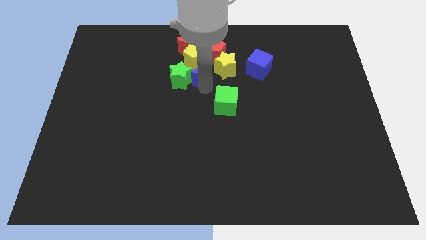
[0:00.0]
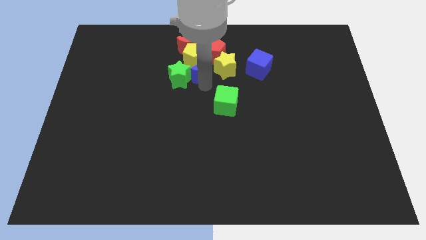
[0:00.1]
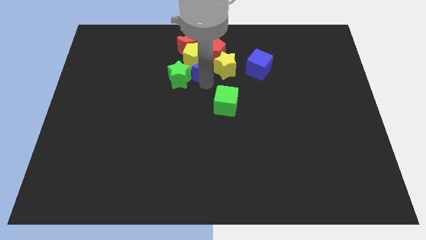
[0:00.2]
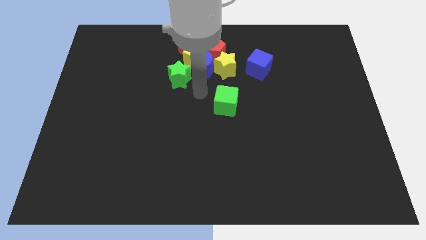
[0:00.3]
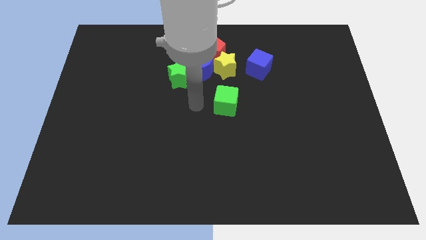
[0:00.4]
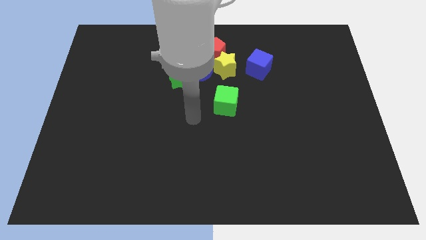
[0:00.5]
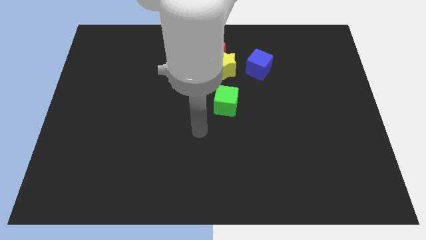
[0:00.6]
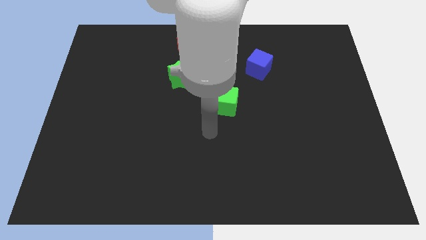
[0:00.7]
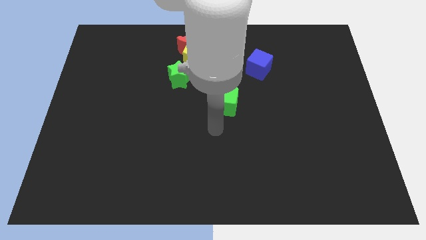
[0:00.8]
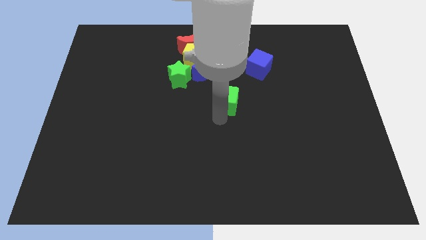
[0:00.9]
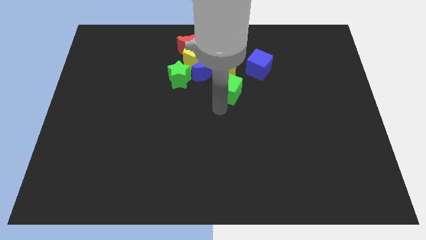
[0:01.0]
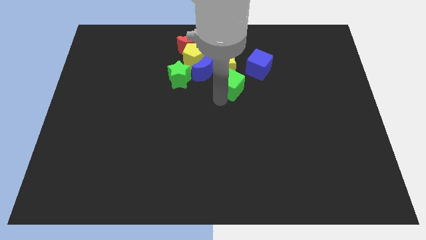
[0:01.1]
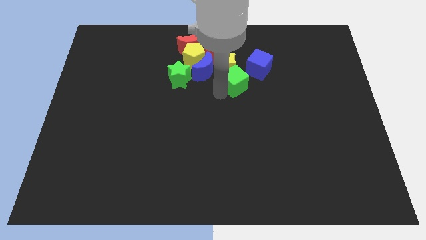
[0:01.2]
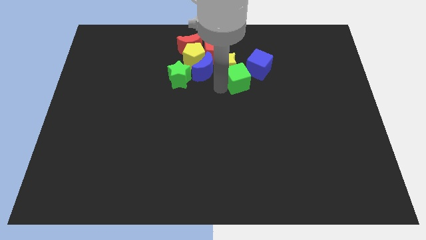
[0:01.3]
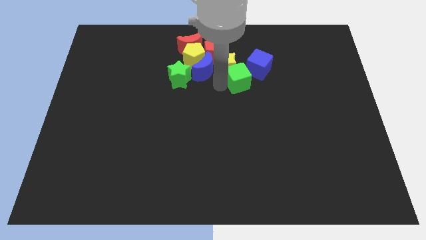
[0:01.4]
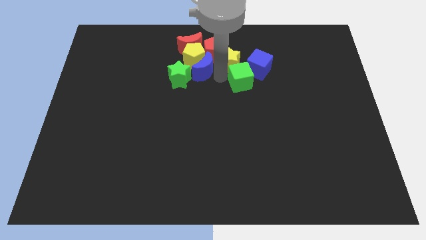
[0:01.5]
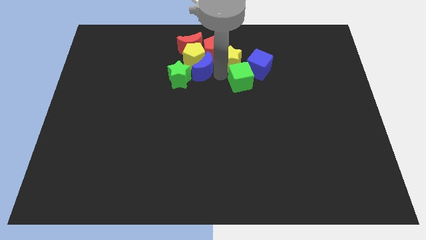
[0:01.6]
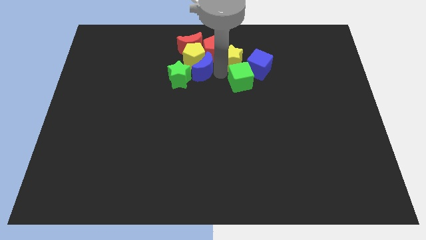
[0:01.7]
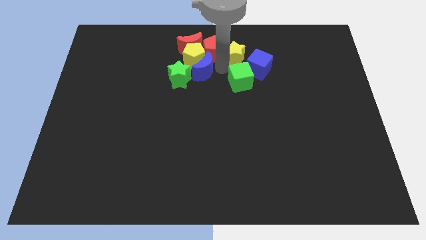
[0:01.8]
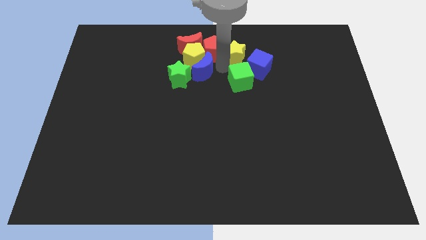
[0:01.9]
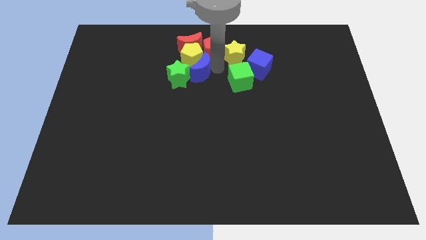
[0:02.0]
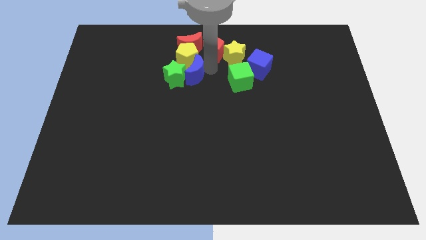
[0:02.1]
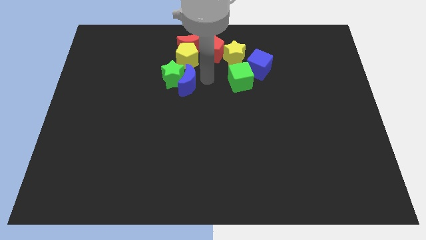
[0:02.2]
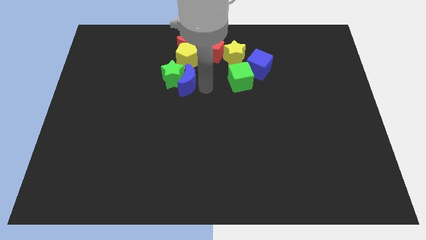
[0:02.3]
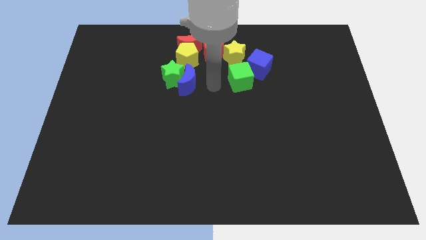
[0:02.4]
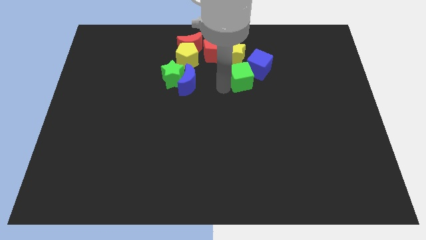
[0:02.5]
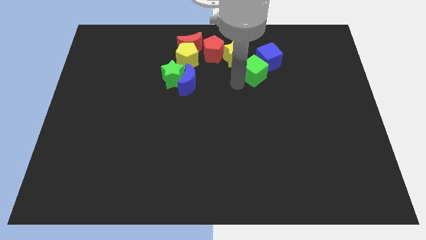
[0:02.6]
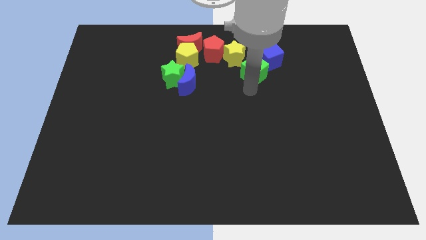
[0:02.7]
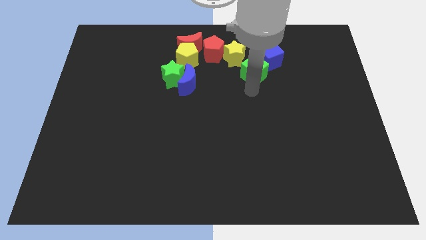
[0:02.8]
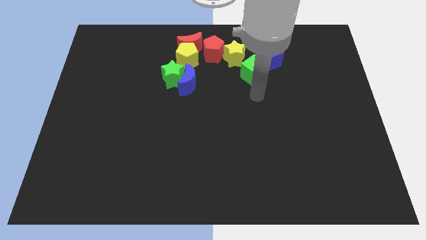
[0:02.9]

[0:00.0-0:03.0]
push the green cube into the blue cube

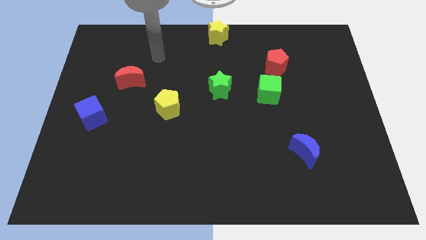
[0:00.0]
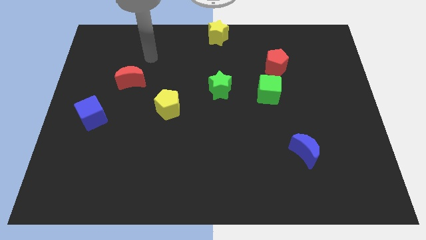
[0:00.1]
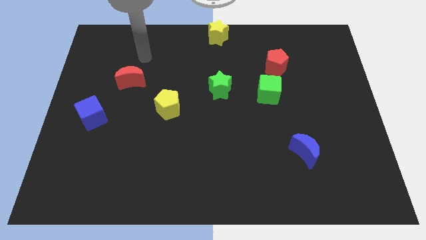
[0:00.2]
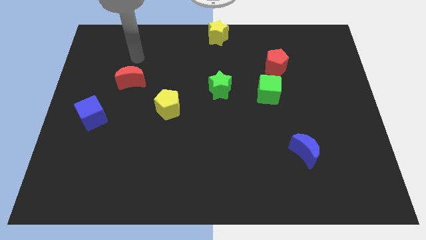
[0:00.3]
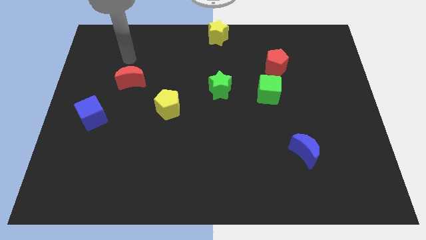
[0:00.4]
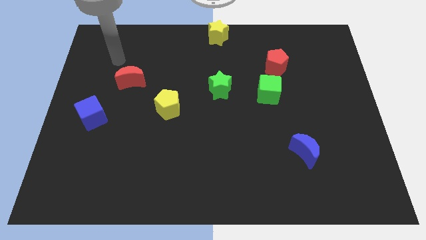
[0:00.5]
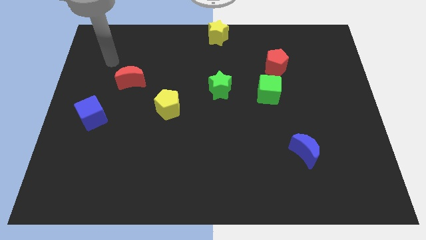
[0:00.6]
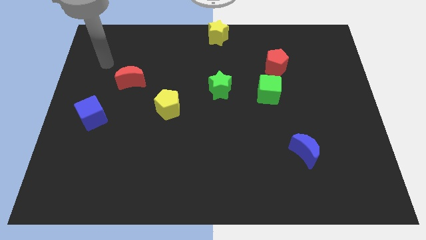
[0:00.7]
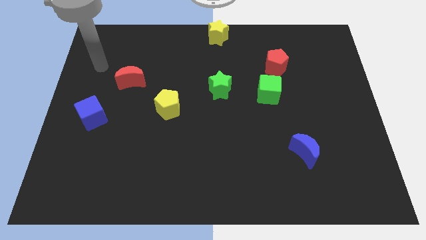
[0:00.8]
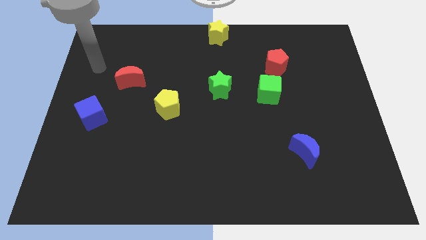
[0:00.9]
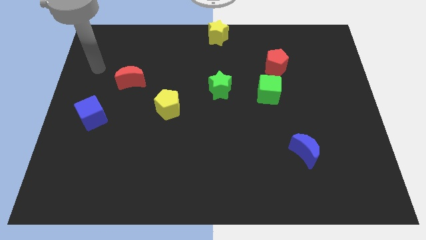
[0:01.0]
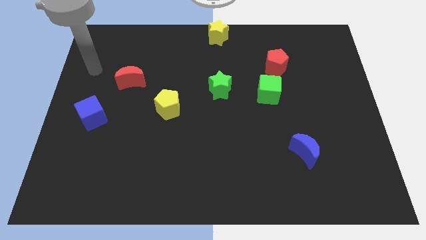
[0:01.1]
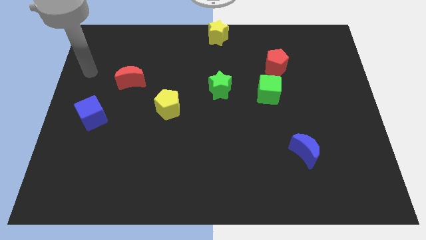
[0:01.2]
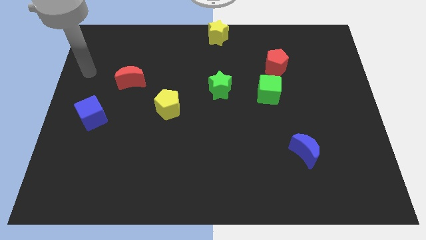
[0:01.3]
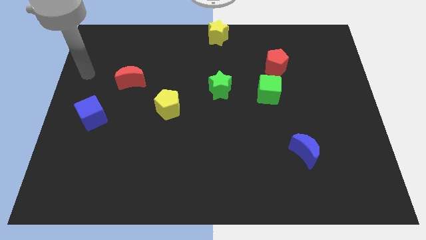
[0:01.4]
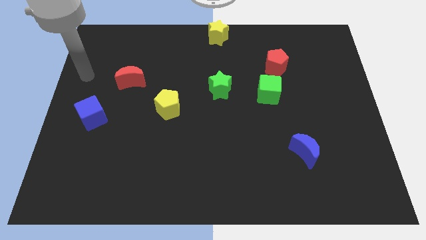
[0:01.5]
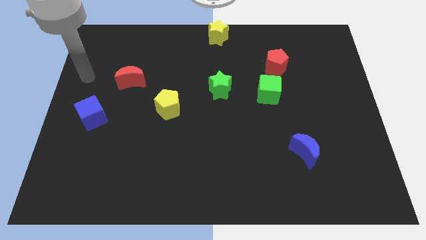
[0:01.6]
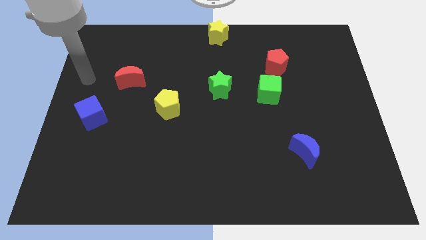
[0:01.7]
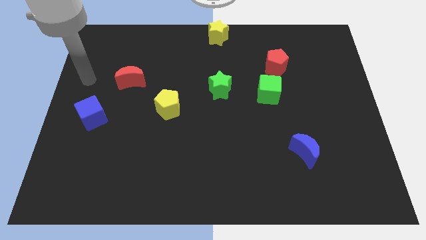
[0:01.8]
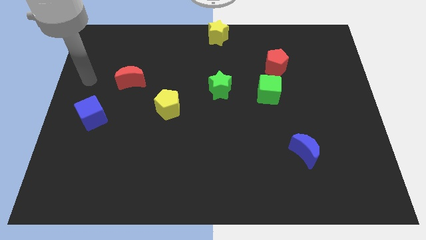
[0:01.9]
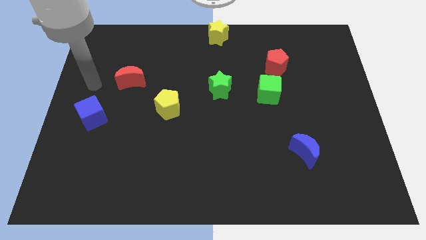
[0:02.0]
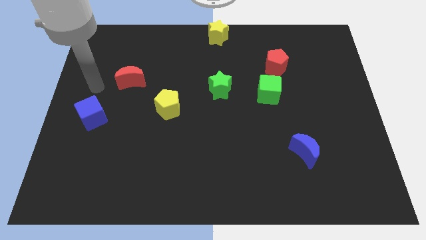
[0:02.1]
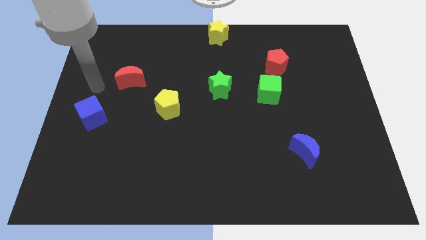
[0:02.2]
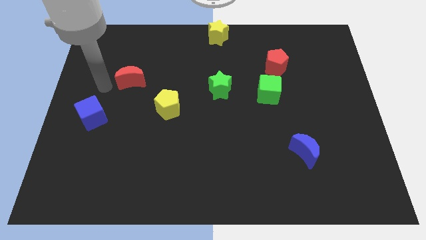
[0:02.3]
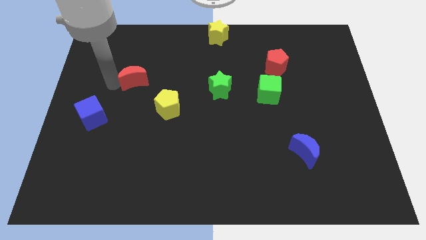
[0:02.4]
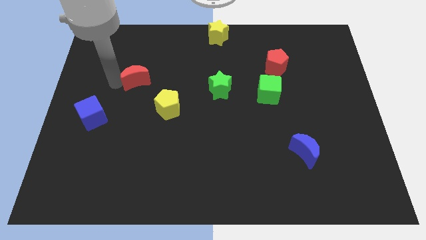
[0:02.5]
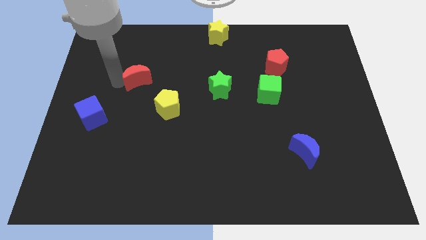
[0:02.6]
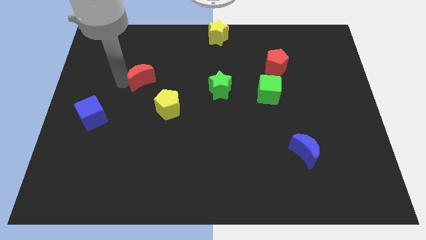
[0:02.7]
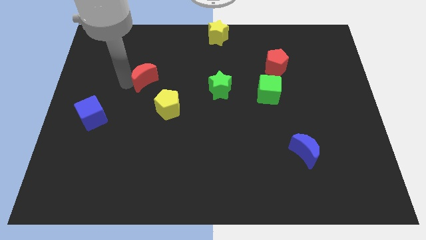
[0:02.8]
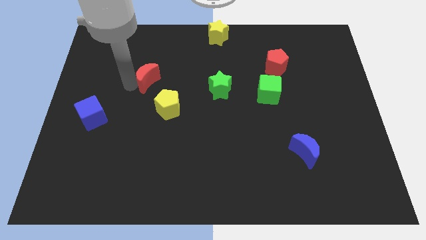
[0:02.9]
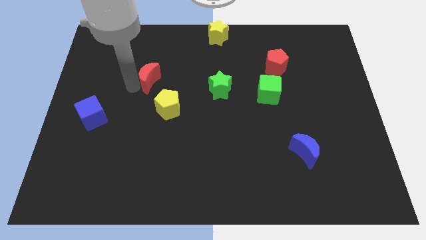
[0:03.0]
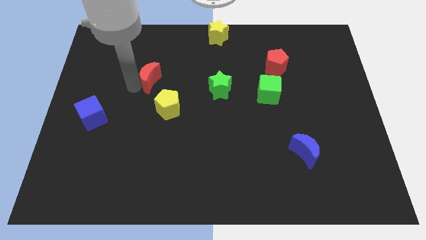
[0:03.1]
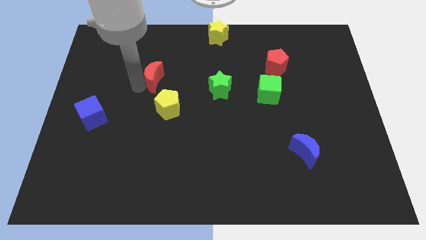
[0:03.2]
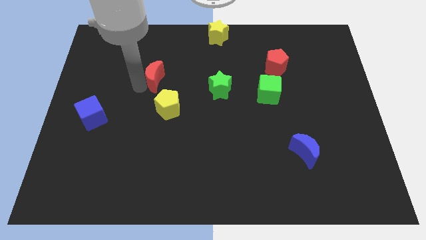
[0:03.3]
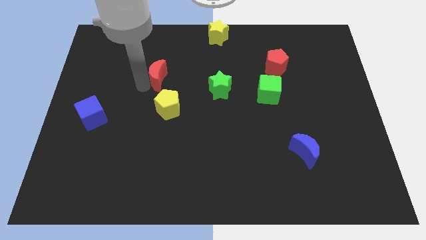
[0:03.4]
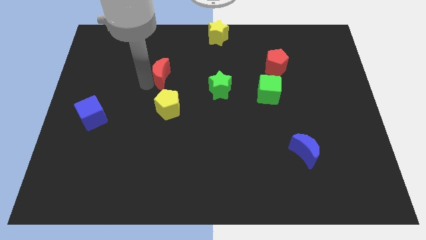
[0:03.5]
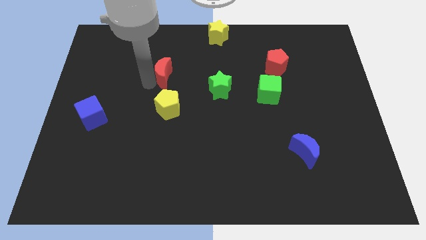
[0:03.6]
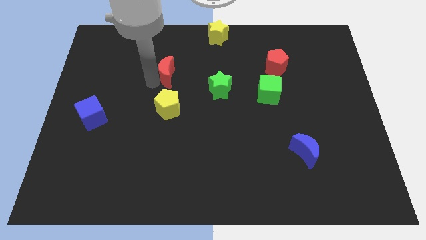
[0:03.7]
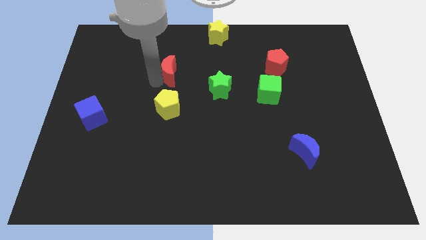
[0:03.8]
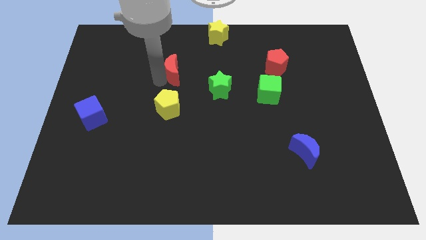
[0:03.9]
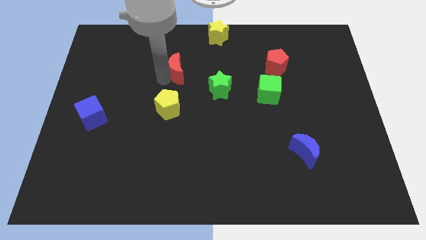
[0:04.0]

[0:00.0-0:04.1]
place red moon vertical to yellow pentagon

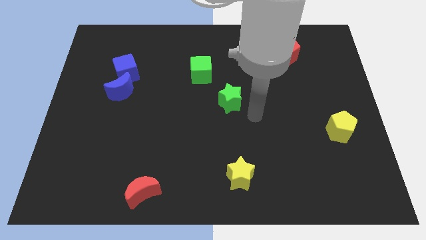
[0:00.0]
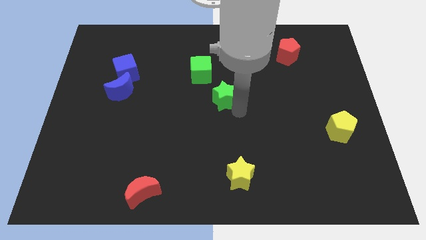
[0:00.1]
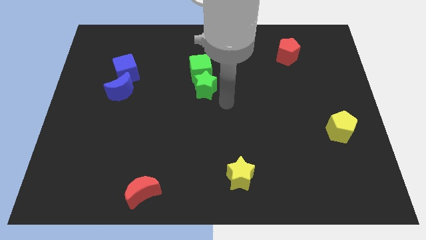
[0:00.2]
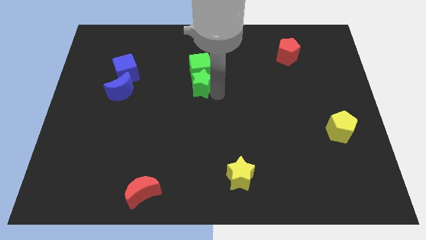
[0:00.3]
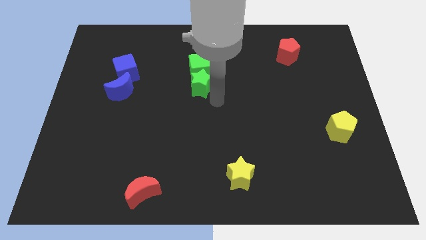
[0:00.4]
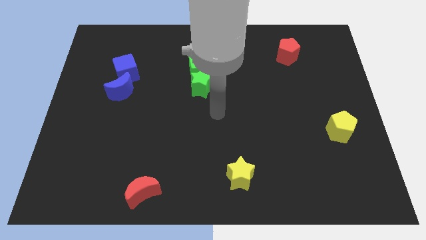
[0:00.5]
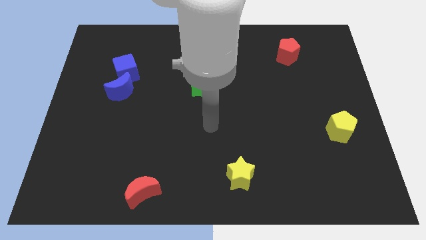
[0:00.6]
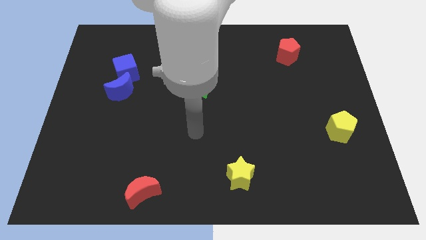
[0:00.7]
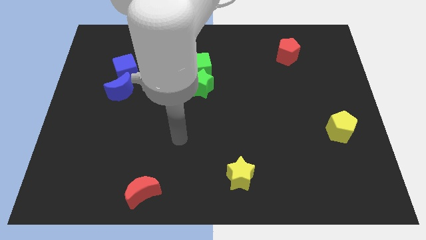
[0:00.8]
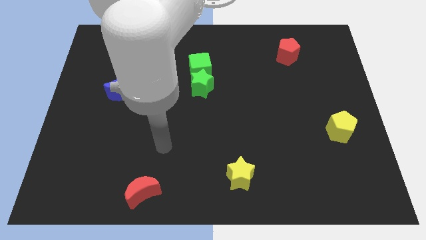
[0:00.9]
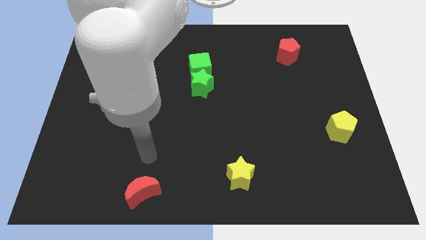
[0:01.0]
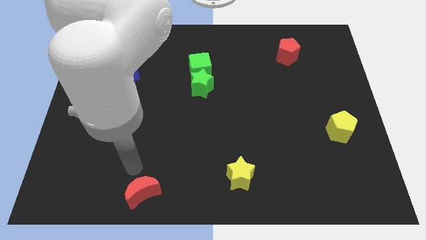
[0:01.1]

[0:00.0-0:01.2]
place the green star to the bottom of the green cube

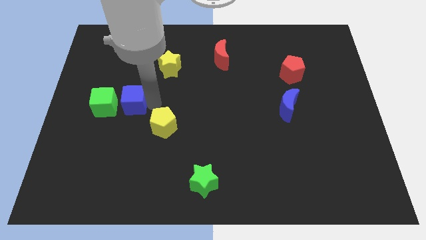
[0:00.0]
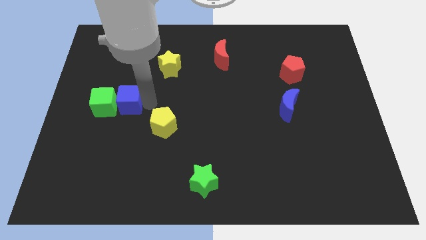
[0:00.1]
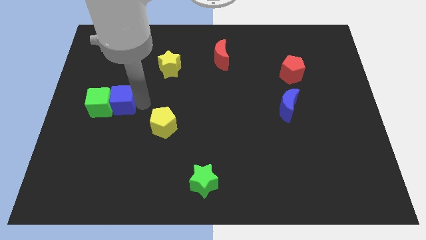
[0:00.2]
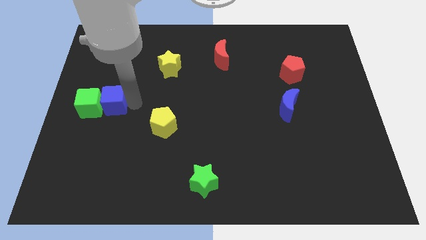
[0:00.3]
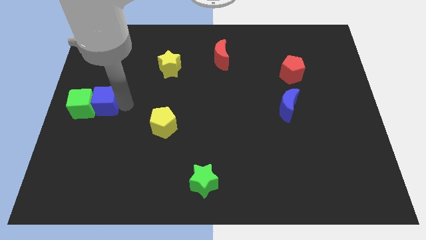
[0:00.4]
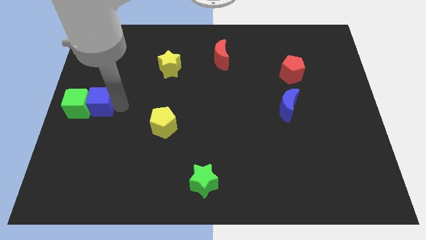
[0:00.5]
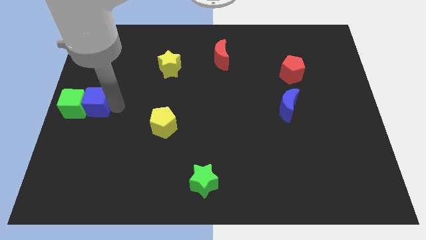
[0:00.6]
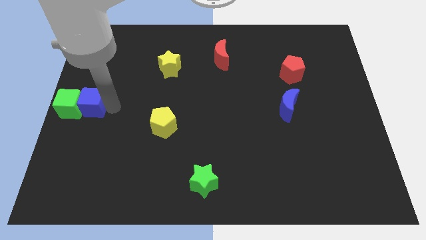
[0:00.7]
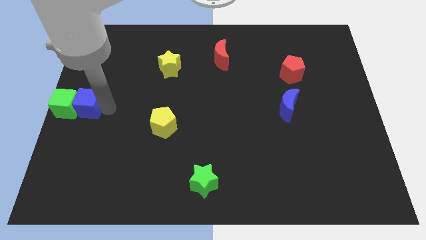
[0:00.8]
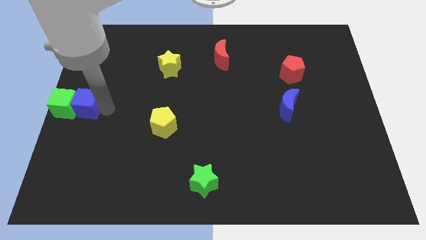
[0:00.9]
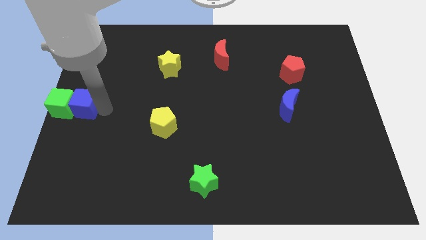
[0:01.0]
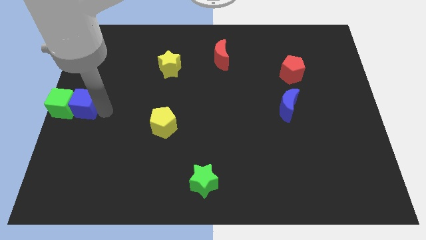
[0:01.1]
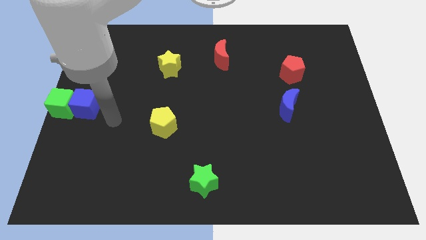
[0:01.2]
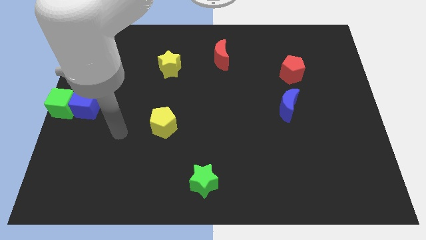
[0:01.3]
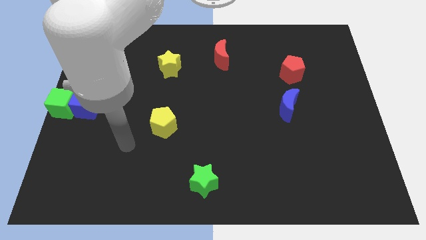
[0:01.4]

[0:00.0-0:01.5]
push both the cubes to the center left
